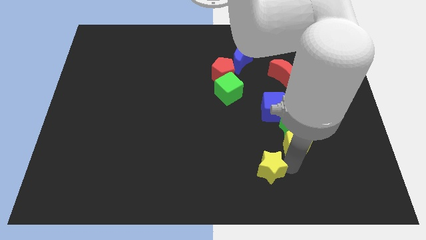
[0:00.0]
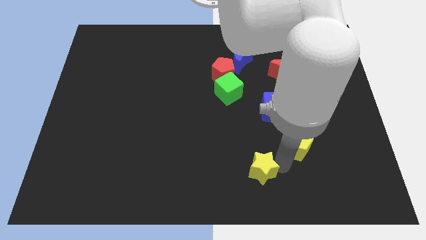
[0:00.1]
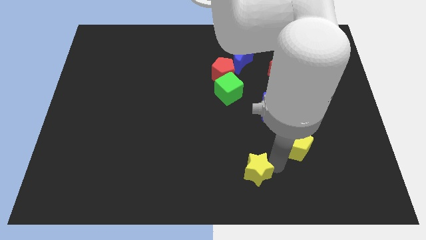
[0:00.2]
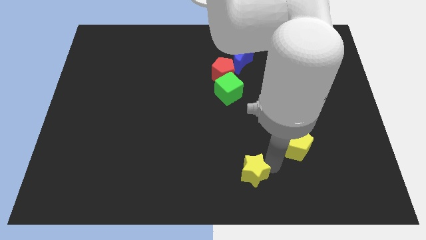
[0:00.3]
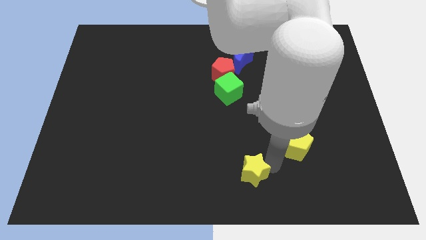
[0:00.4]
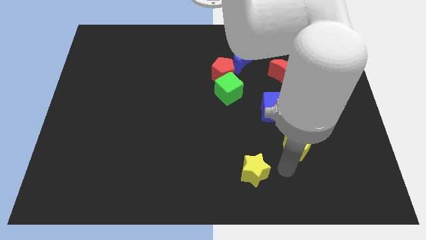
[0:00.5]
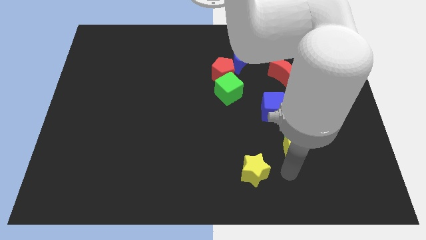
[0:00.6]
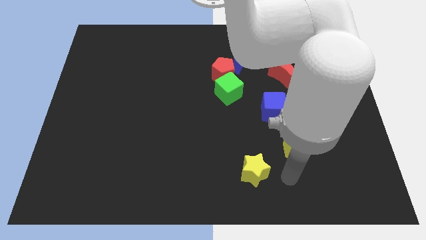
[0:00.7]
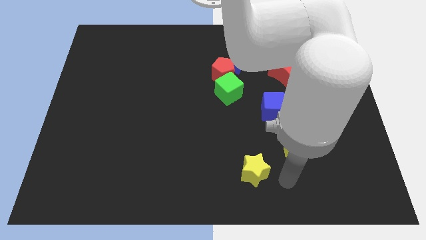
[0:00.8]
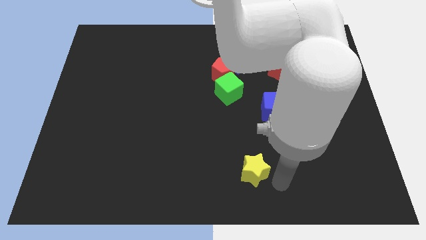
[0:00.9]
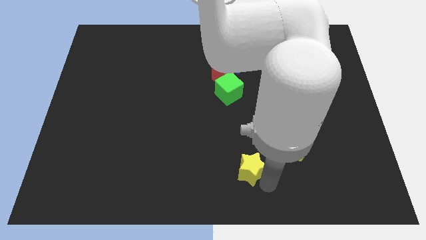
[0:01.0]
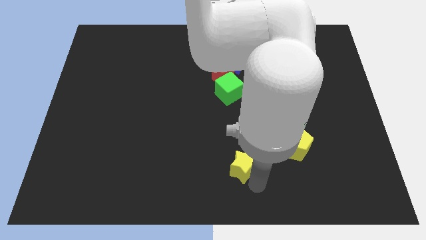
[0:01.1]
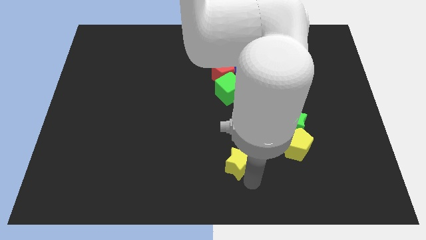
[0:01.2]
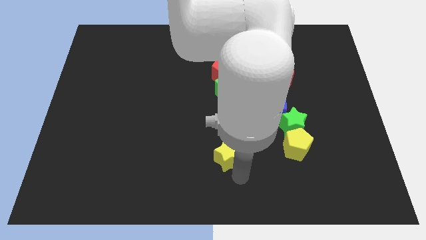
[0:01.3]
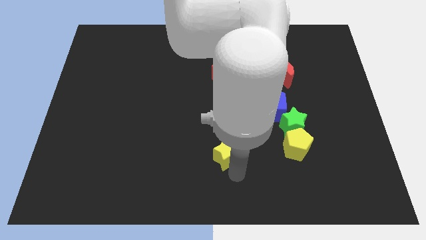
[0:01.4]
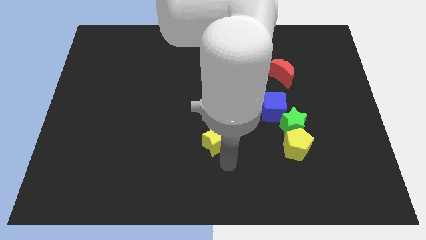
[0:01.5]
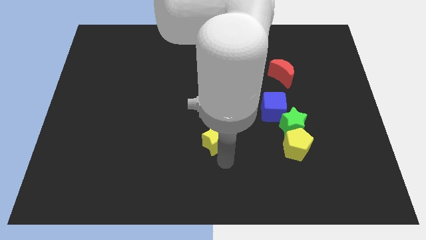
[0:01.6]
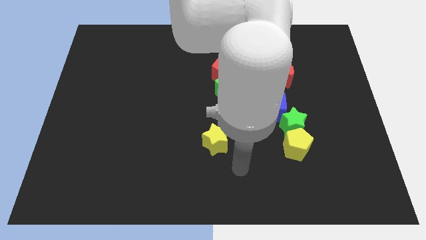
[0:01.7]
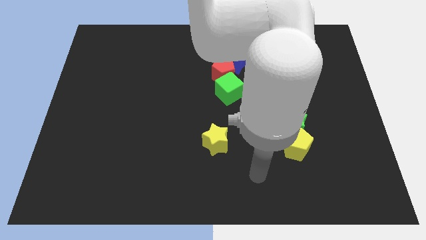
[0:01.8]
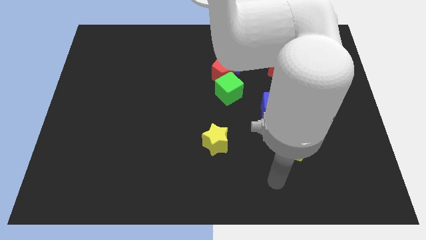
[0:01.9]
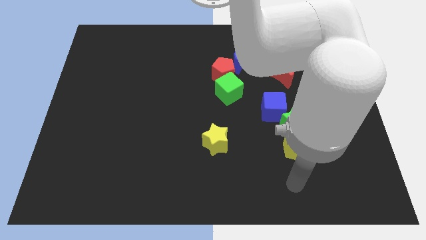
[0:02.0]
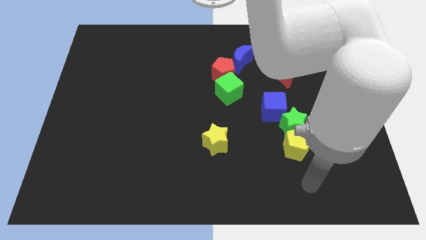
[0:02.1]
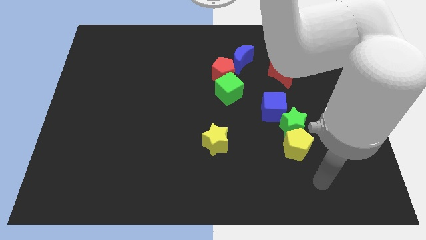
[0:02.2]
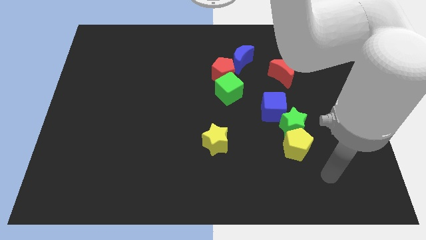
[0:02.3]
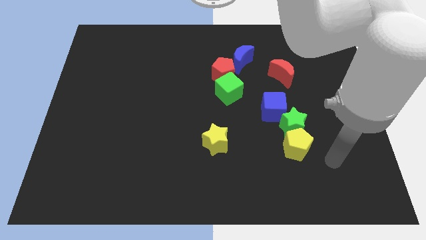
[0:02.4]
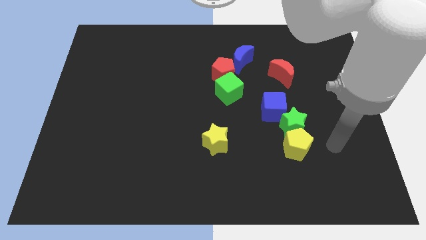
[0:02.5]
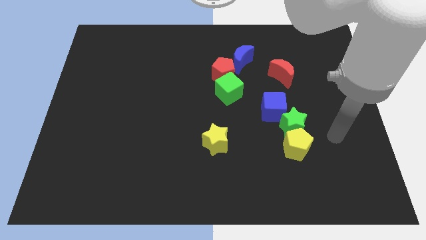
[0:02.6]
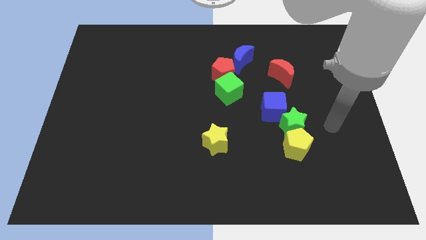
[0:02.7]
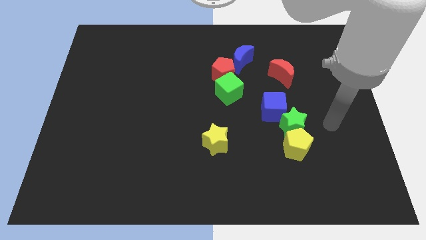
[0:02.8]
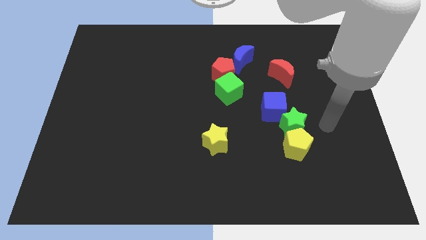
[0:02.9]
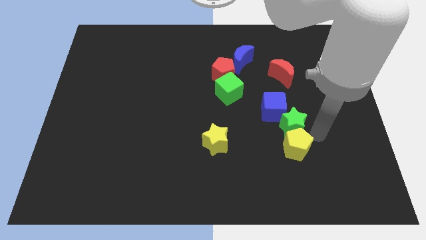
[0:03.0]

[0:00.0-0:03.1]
place the yellow star horizontally to the left side of the yellow pentagon

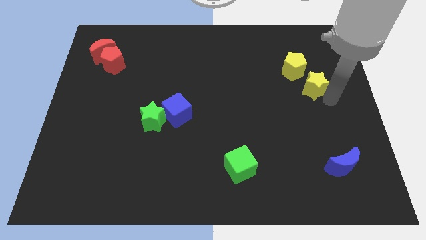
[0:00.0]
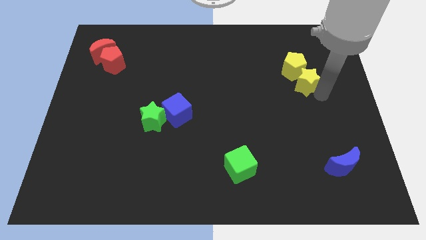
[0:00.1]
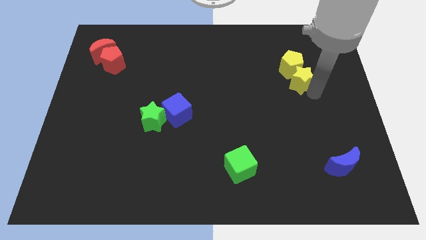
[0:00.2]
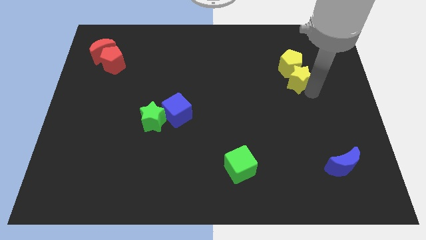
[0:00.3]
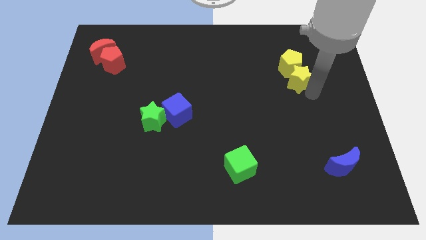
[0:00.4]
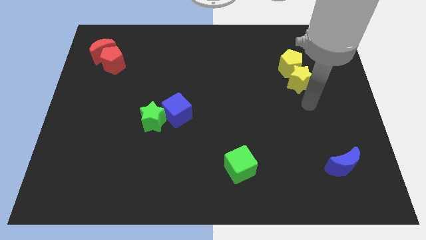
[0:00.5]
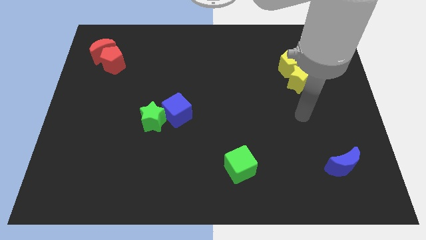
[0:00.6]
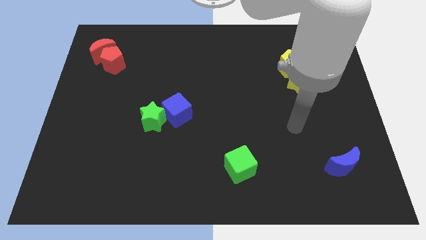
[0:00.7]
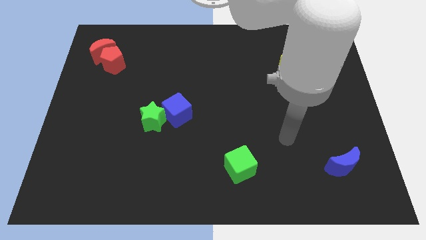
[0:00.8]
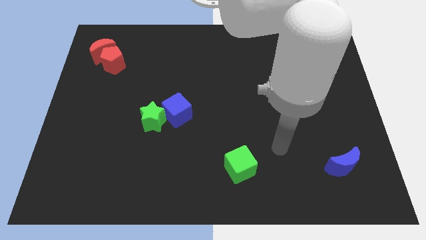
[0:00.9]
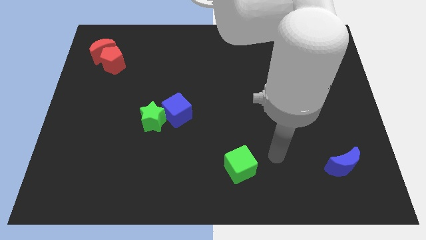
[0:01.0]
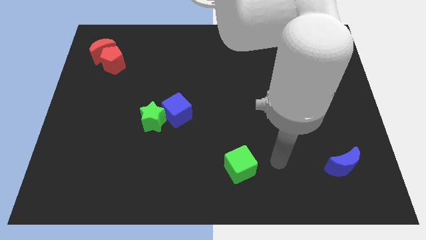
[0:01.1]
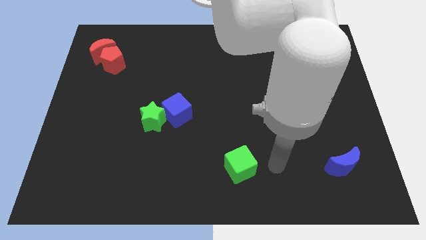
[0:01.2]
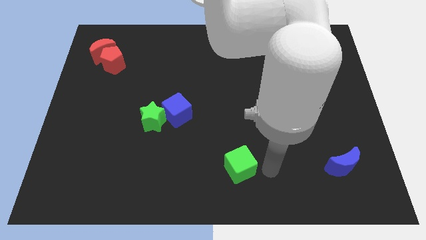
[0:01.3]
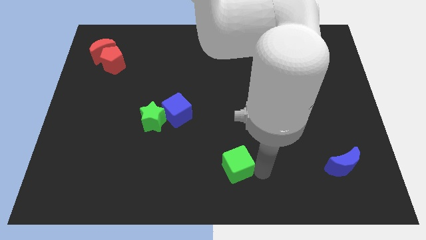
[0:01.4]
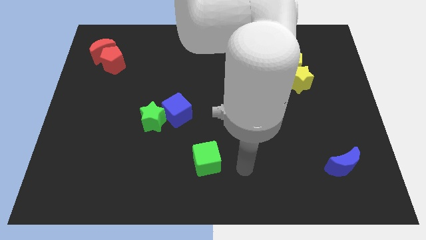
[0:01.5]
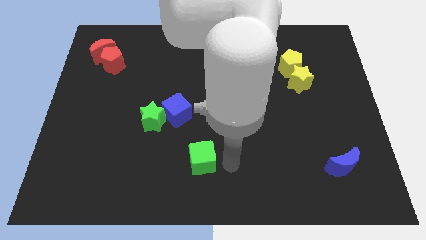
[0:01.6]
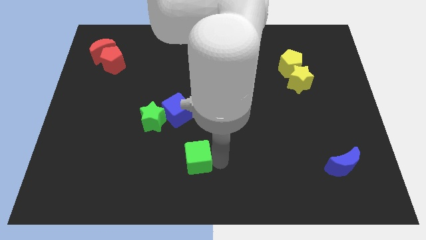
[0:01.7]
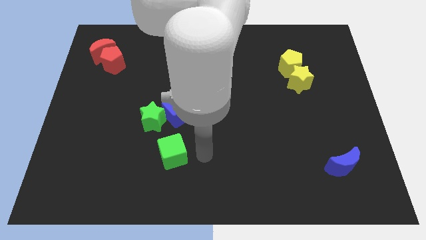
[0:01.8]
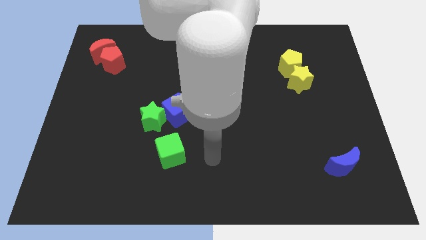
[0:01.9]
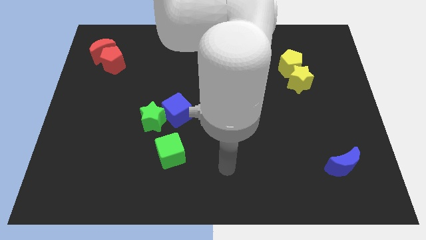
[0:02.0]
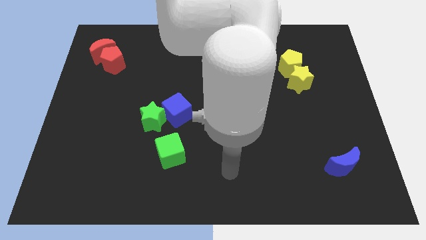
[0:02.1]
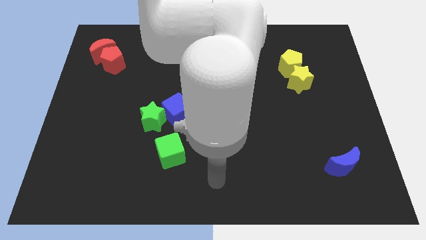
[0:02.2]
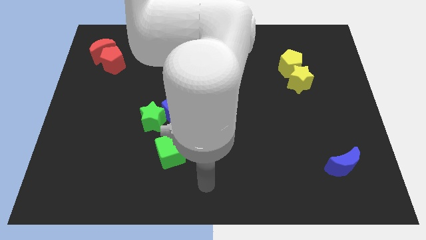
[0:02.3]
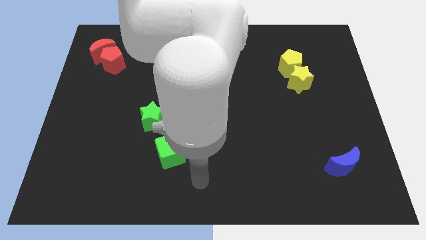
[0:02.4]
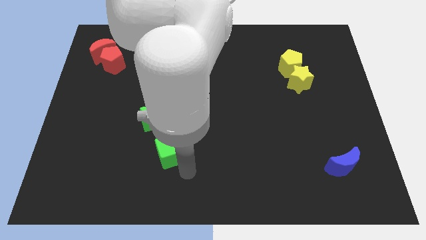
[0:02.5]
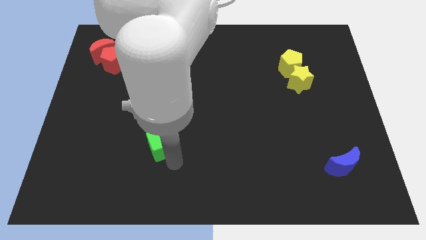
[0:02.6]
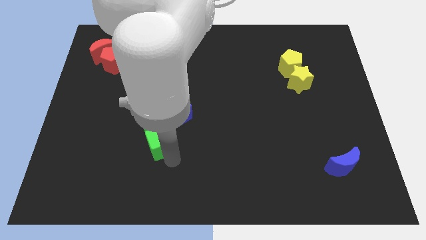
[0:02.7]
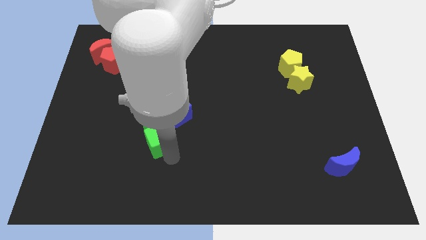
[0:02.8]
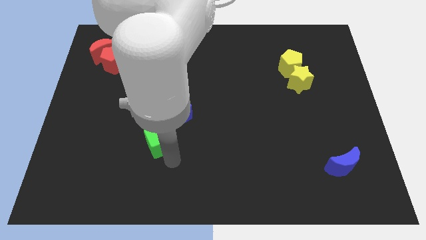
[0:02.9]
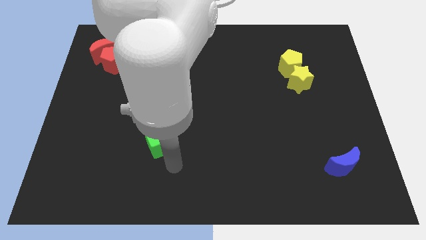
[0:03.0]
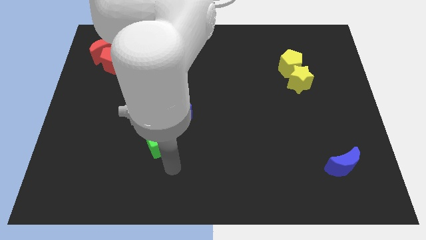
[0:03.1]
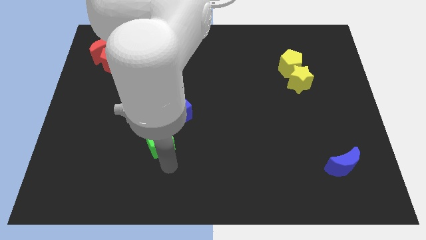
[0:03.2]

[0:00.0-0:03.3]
push green cube to the bottom left of the green star

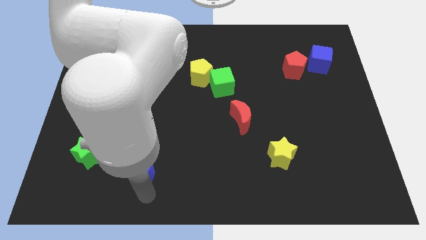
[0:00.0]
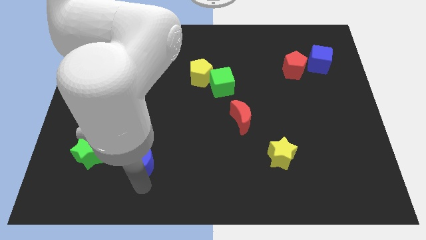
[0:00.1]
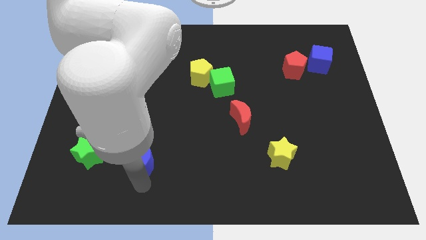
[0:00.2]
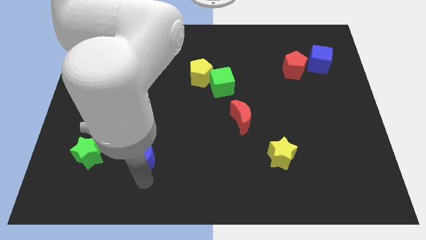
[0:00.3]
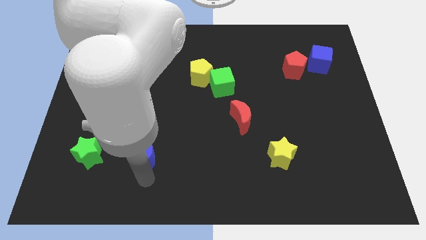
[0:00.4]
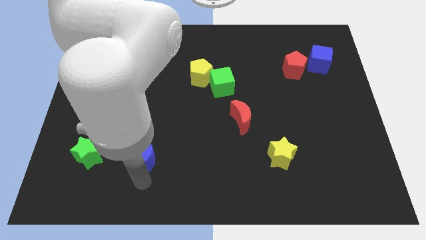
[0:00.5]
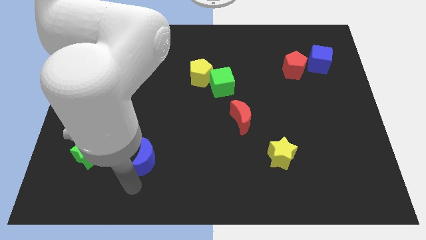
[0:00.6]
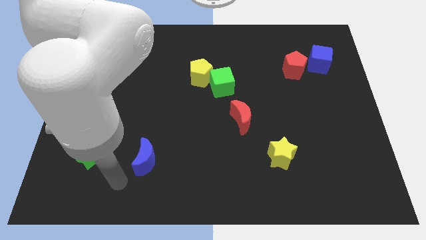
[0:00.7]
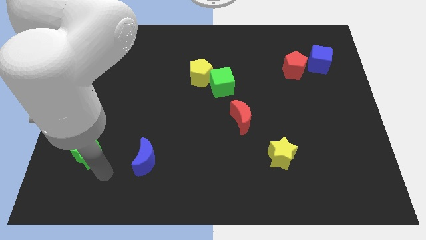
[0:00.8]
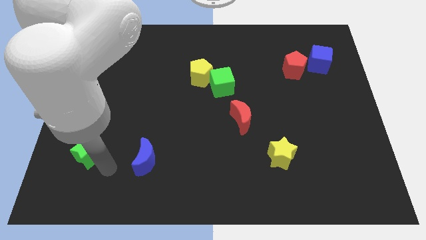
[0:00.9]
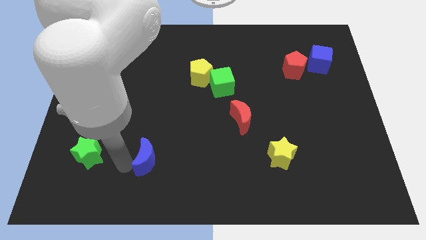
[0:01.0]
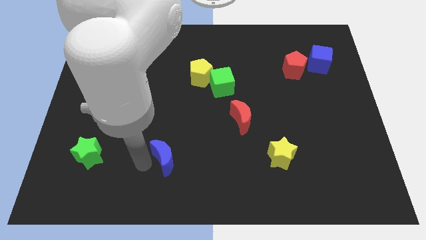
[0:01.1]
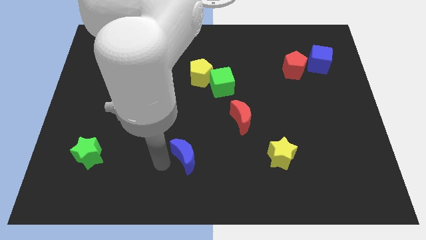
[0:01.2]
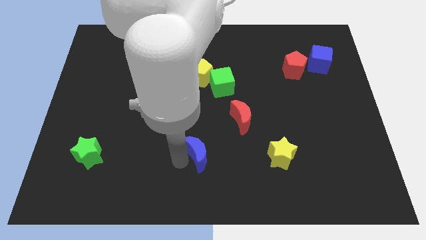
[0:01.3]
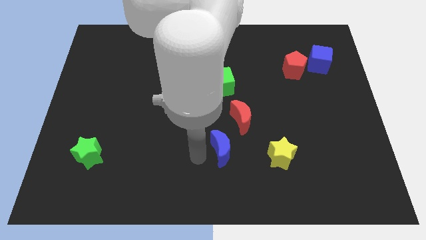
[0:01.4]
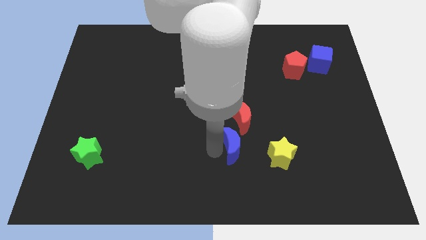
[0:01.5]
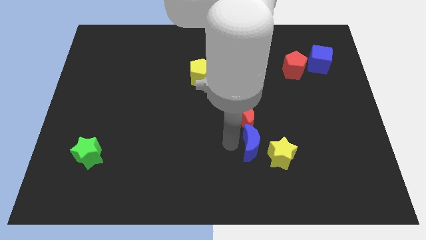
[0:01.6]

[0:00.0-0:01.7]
move blue moon to the bottom left of the red moon

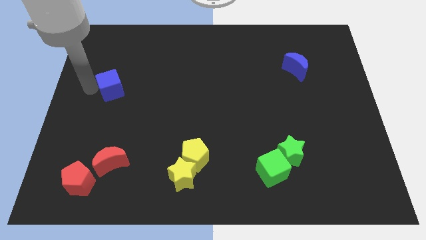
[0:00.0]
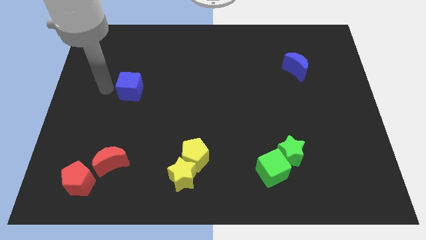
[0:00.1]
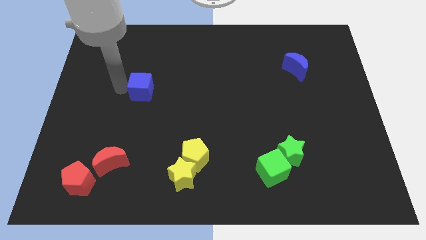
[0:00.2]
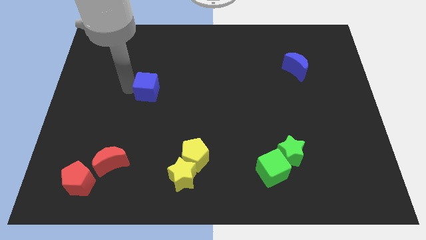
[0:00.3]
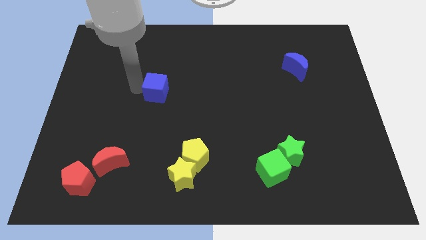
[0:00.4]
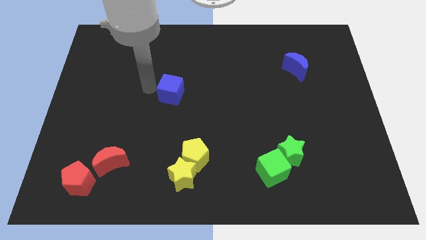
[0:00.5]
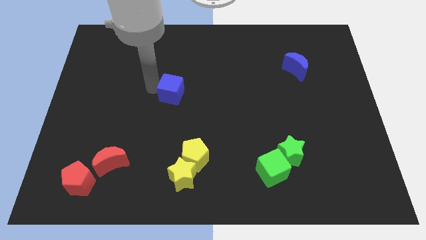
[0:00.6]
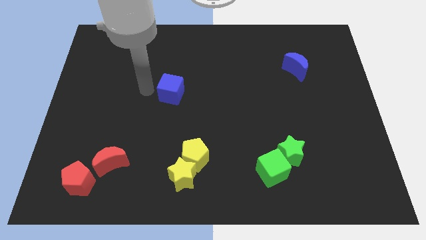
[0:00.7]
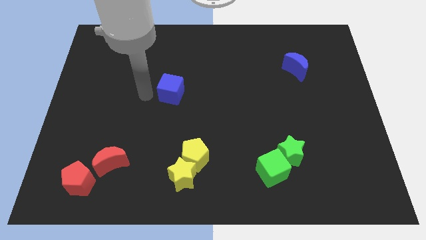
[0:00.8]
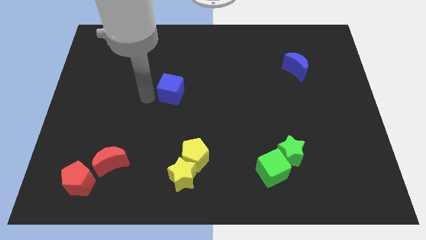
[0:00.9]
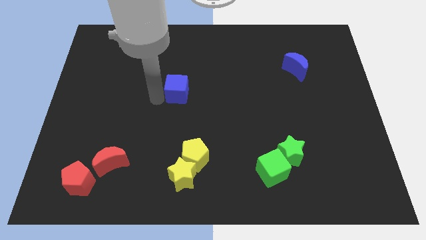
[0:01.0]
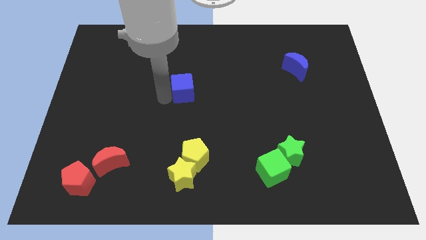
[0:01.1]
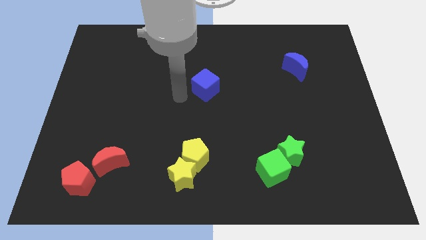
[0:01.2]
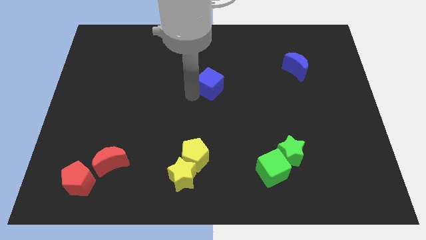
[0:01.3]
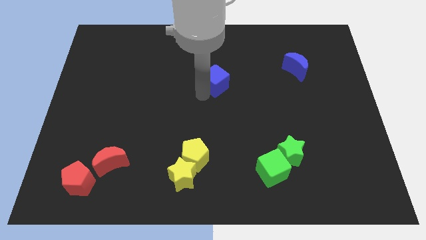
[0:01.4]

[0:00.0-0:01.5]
push the blue cube above the yellow pentagon
